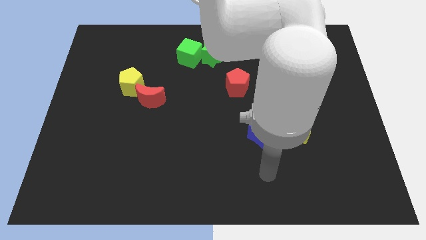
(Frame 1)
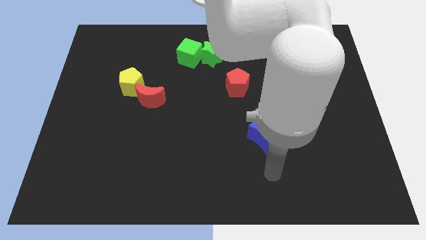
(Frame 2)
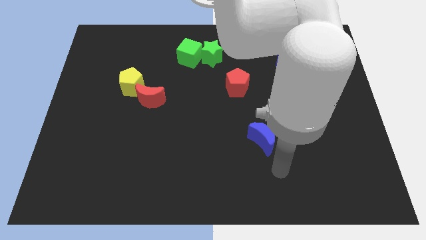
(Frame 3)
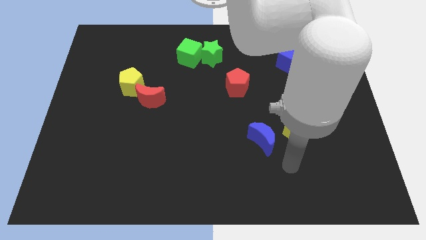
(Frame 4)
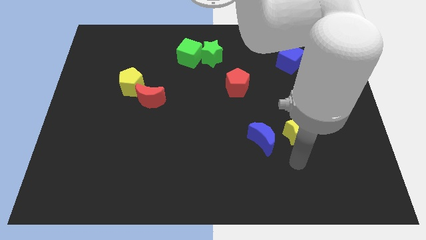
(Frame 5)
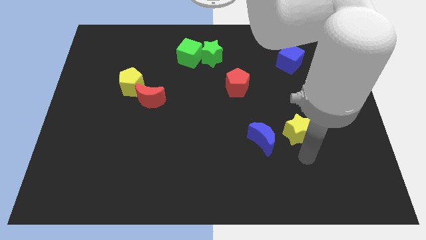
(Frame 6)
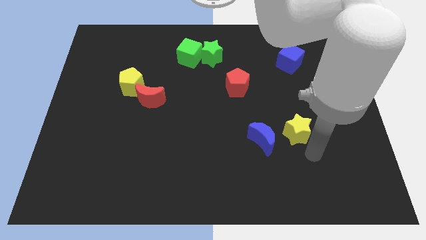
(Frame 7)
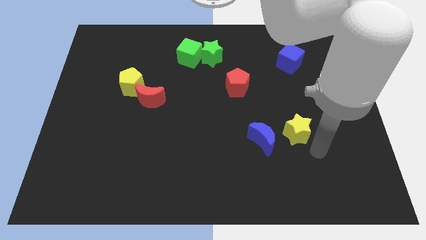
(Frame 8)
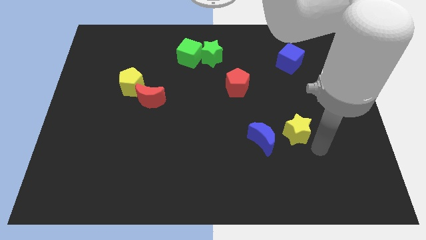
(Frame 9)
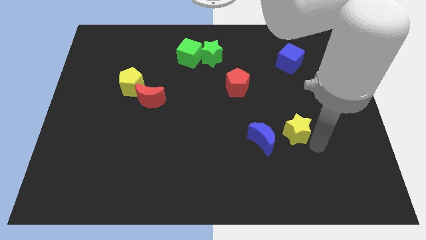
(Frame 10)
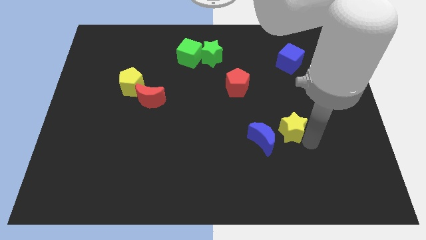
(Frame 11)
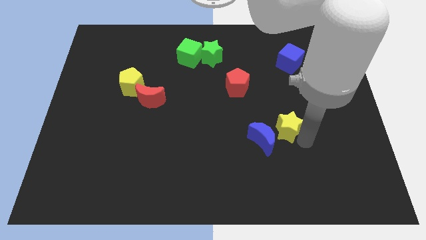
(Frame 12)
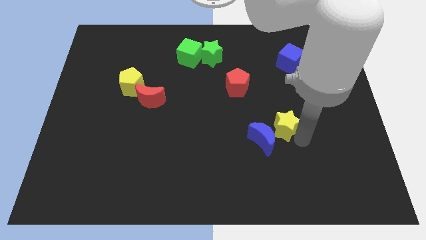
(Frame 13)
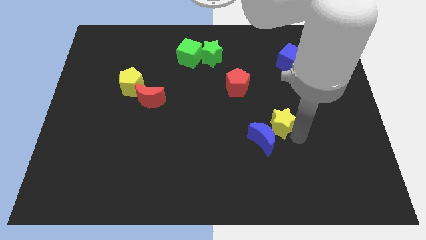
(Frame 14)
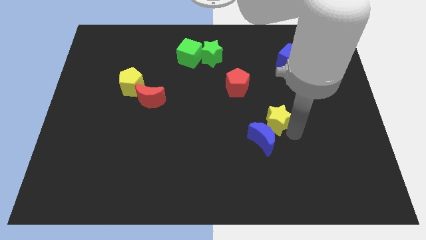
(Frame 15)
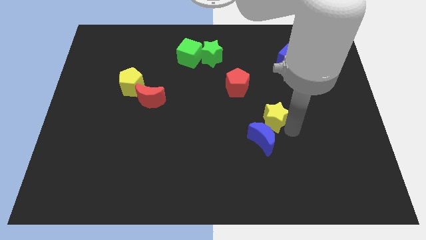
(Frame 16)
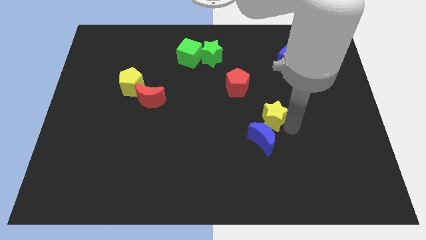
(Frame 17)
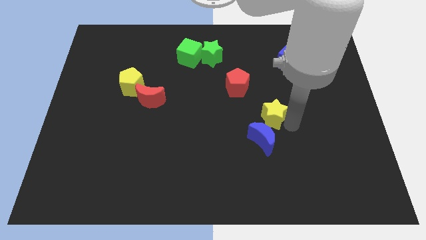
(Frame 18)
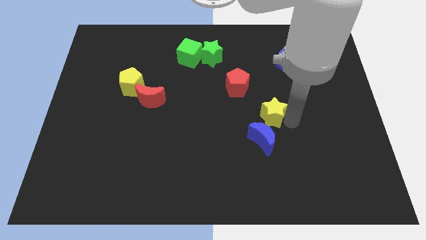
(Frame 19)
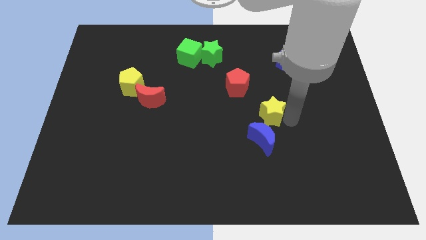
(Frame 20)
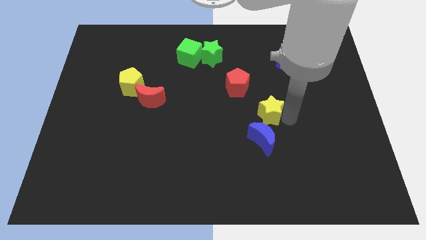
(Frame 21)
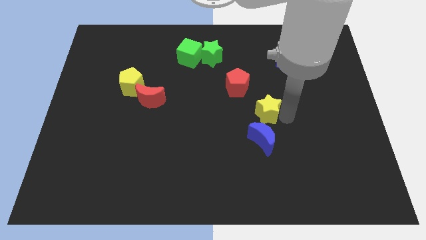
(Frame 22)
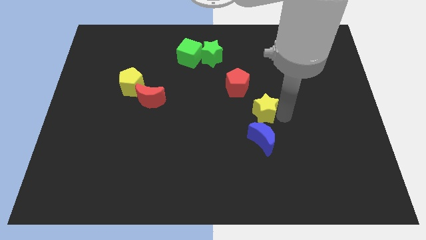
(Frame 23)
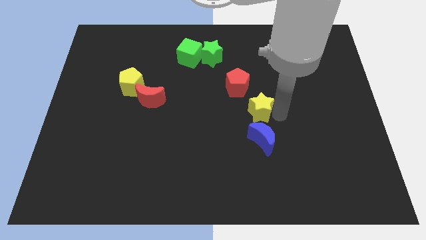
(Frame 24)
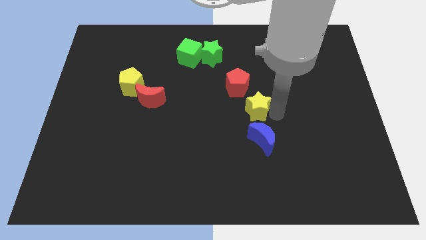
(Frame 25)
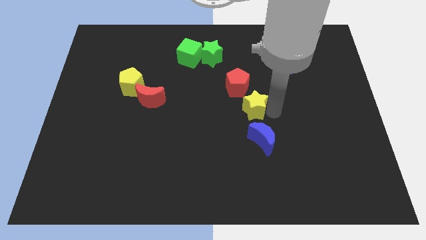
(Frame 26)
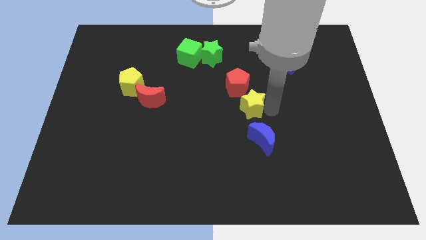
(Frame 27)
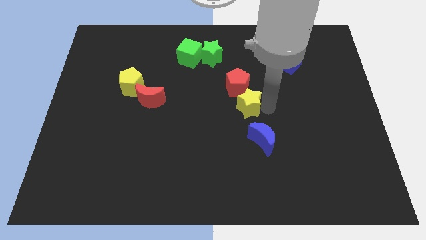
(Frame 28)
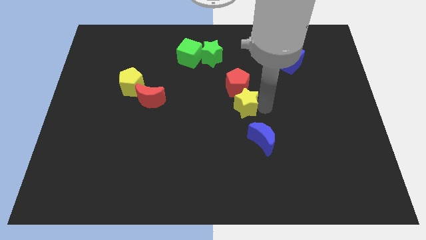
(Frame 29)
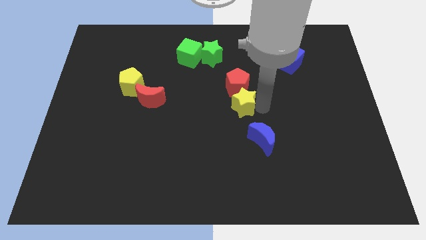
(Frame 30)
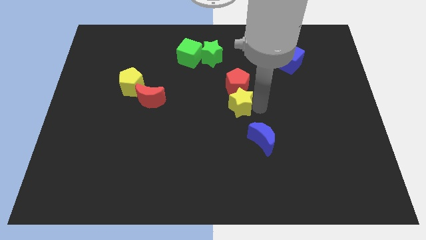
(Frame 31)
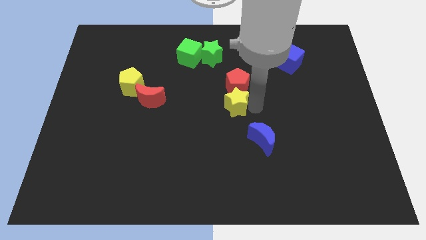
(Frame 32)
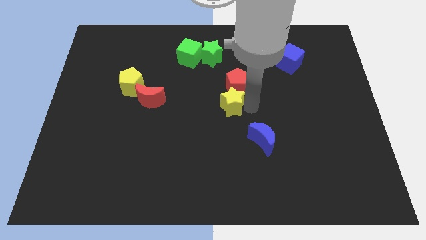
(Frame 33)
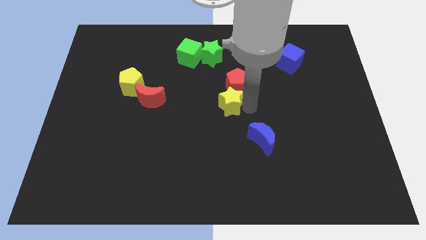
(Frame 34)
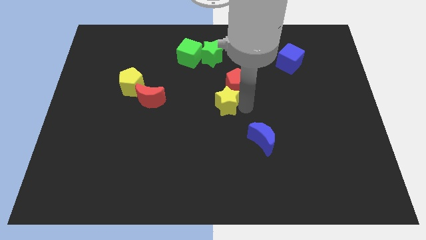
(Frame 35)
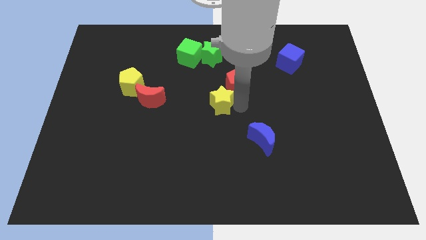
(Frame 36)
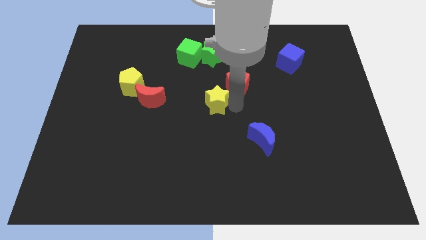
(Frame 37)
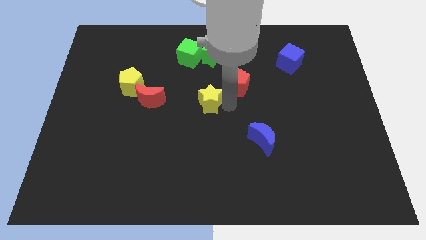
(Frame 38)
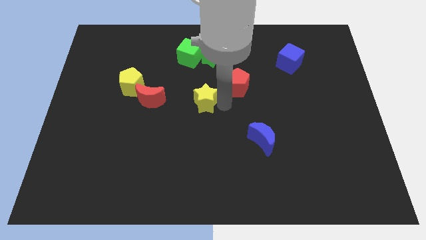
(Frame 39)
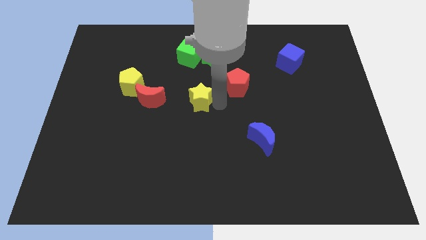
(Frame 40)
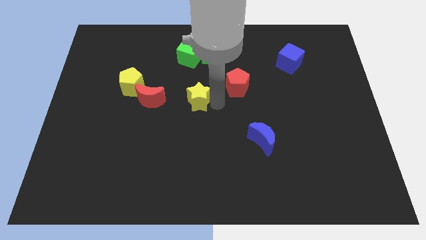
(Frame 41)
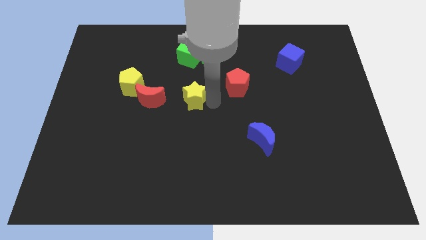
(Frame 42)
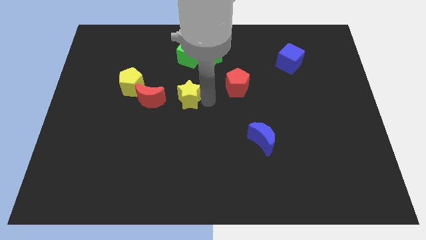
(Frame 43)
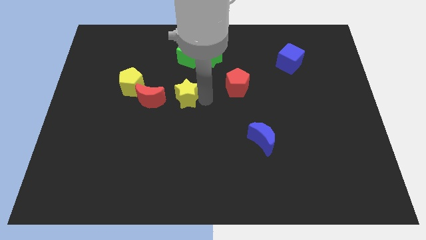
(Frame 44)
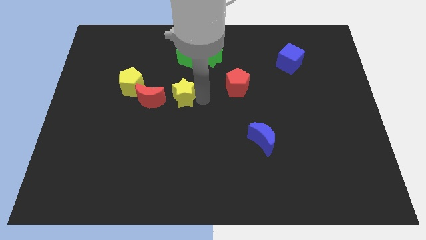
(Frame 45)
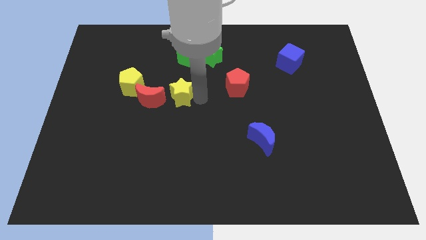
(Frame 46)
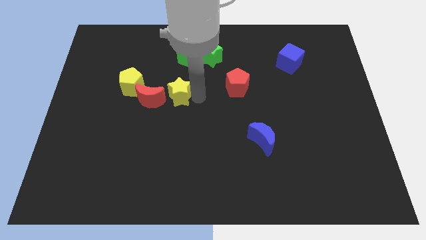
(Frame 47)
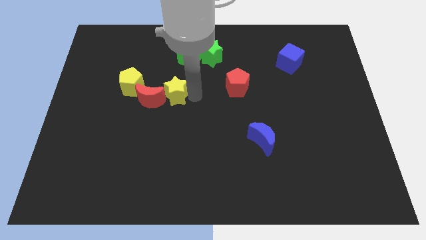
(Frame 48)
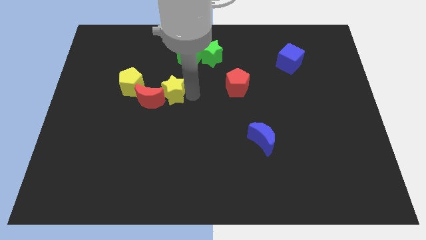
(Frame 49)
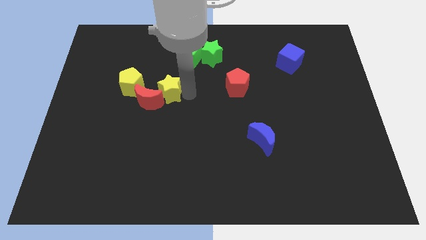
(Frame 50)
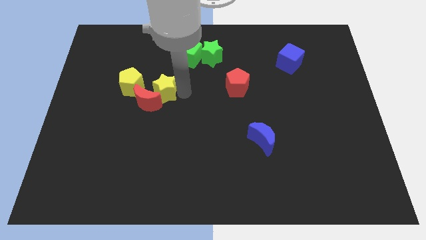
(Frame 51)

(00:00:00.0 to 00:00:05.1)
push the yellow star towards the red moon

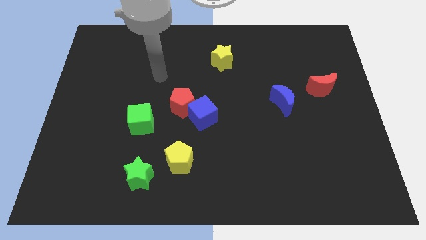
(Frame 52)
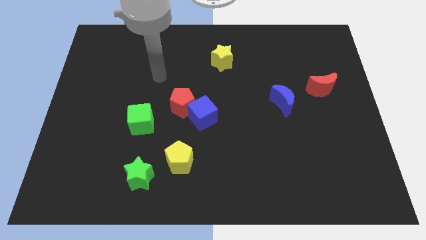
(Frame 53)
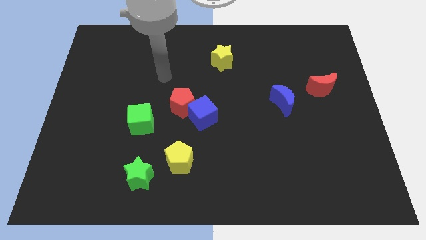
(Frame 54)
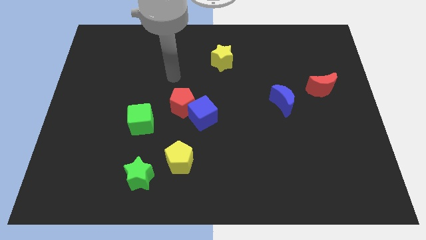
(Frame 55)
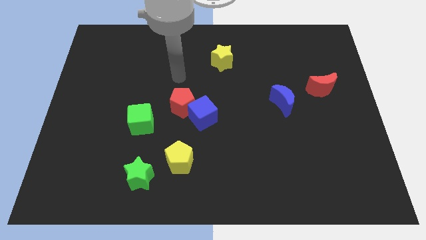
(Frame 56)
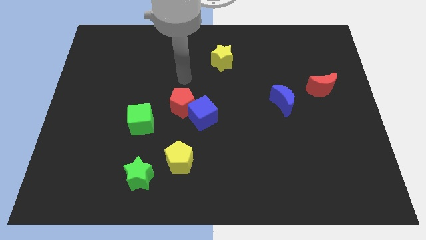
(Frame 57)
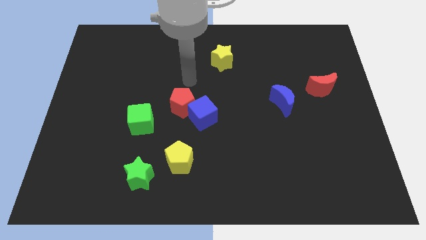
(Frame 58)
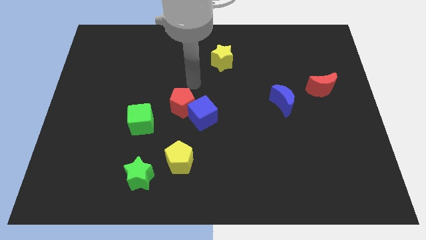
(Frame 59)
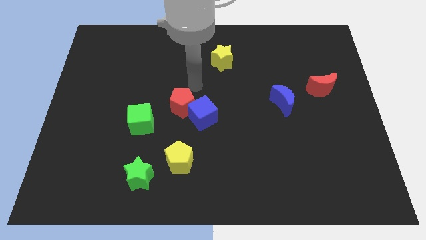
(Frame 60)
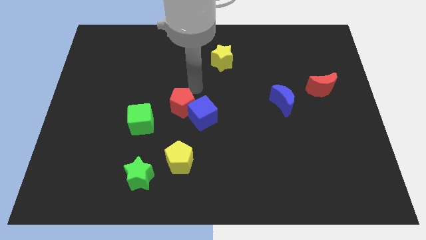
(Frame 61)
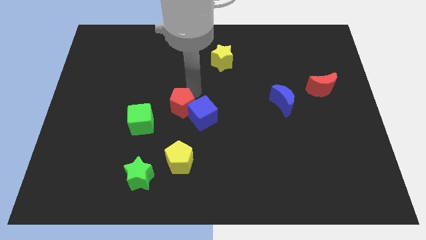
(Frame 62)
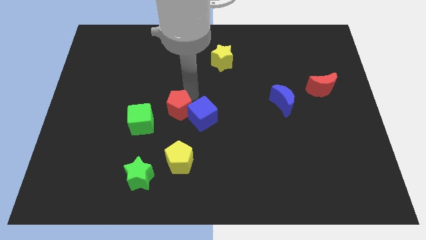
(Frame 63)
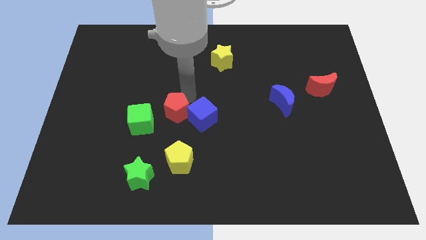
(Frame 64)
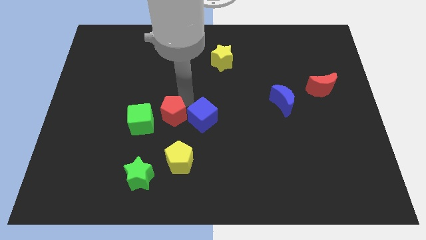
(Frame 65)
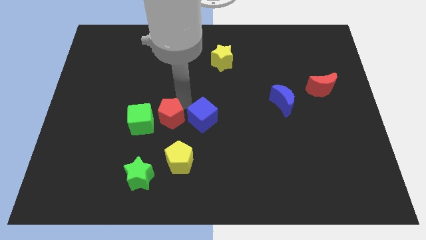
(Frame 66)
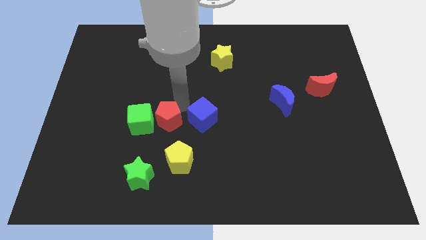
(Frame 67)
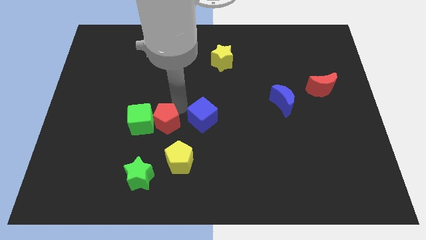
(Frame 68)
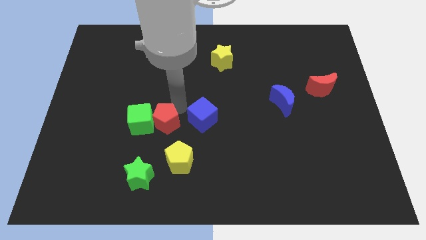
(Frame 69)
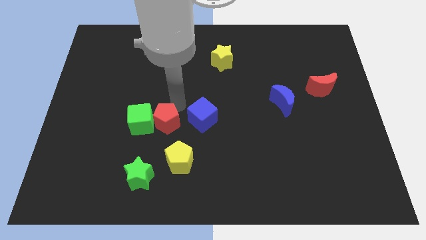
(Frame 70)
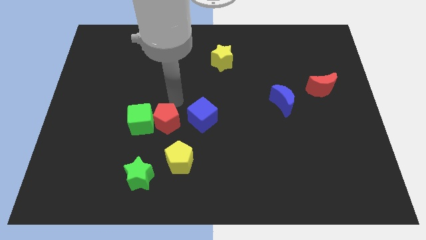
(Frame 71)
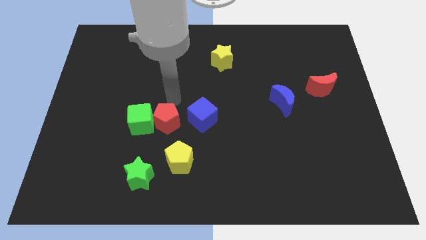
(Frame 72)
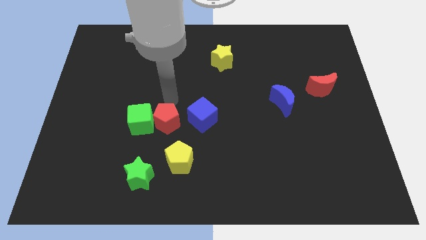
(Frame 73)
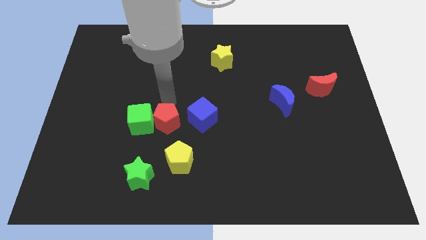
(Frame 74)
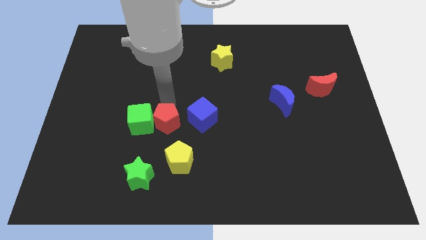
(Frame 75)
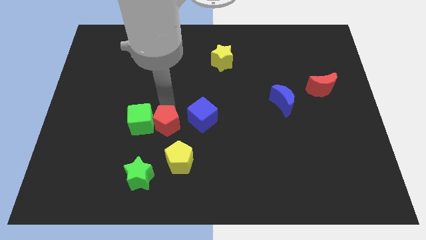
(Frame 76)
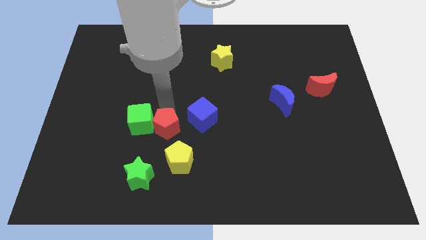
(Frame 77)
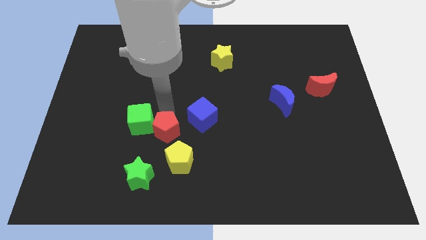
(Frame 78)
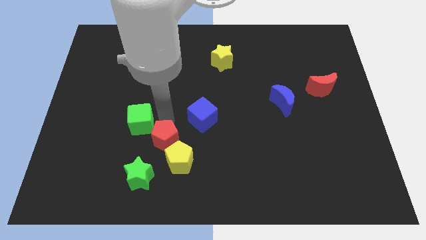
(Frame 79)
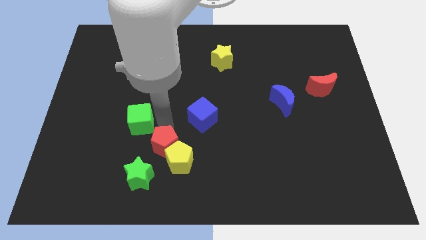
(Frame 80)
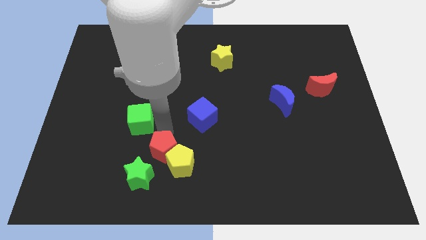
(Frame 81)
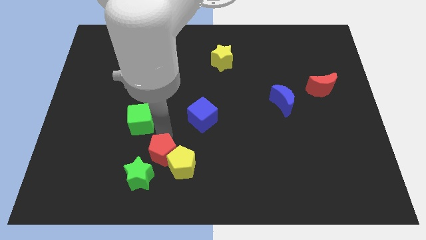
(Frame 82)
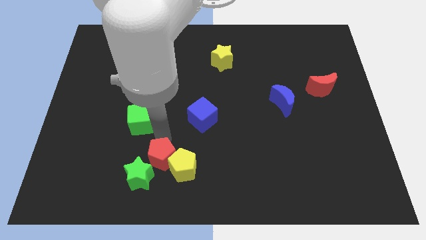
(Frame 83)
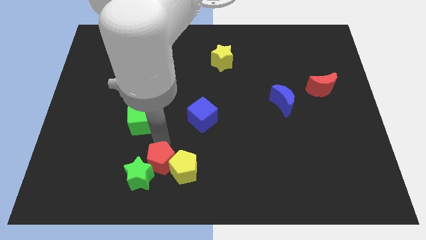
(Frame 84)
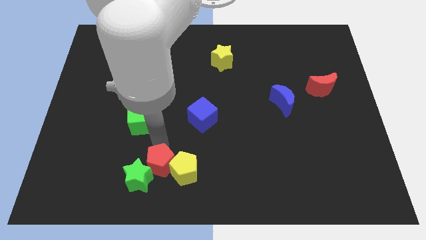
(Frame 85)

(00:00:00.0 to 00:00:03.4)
slide the red pentagon to the green star
